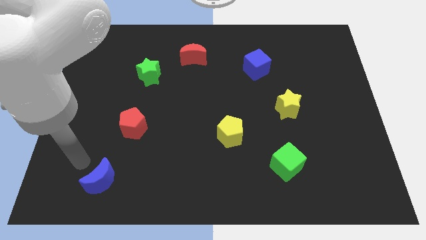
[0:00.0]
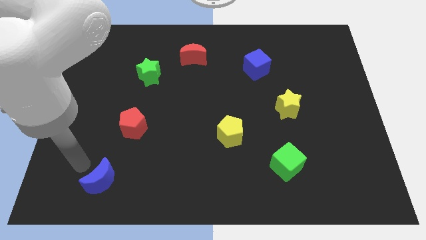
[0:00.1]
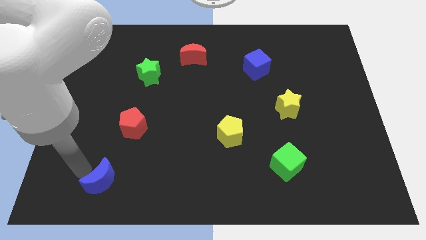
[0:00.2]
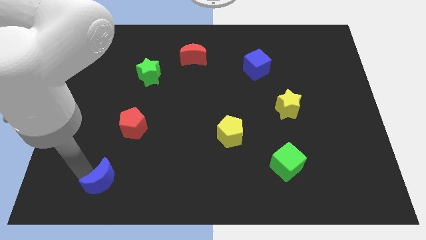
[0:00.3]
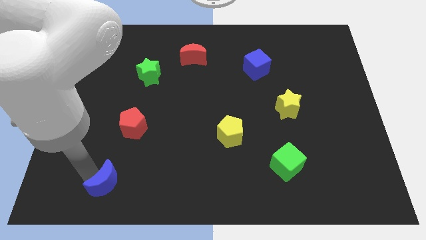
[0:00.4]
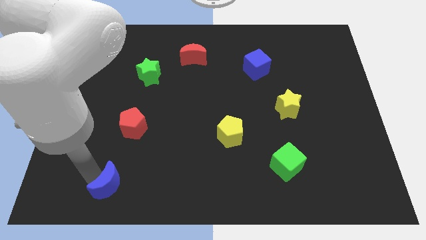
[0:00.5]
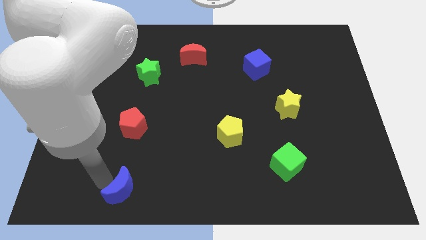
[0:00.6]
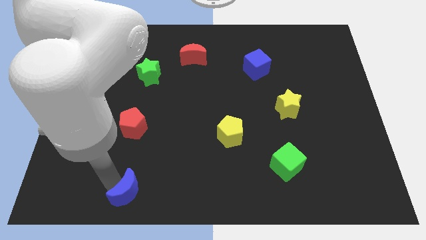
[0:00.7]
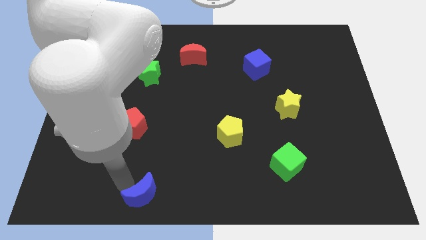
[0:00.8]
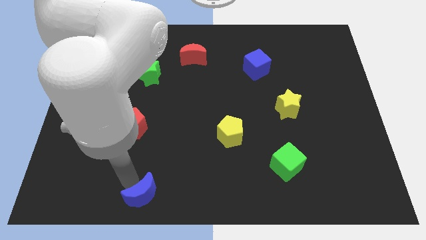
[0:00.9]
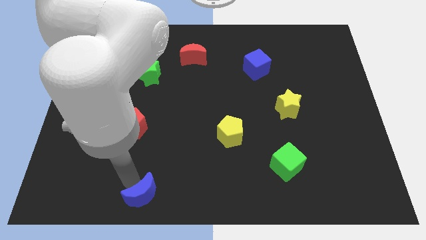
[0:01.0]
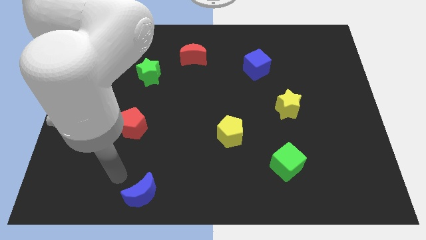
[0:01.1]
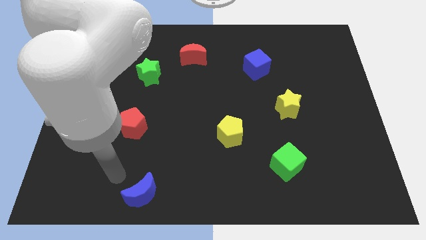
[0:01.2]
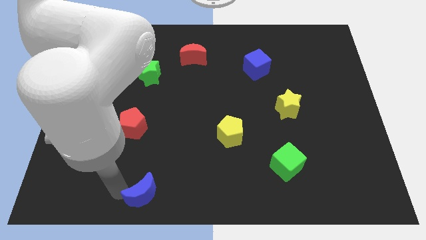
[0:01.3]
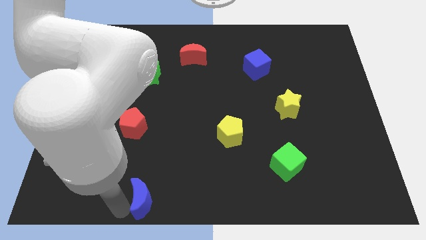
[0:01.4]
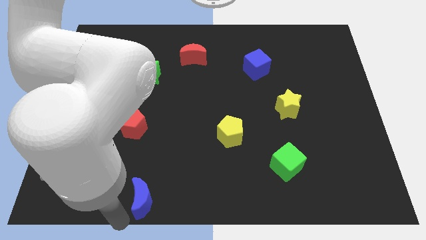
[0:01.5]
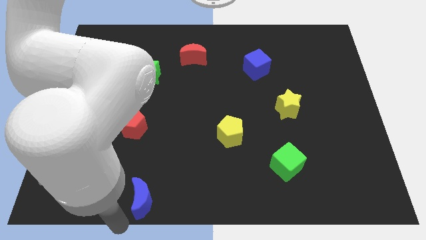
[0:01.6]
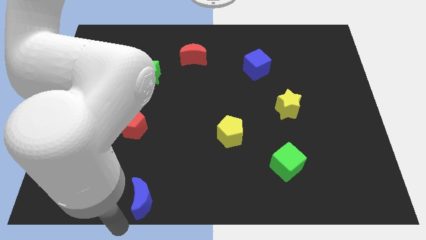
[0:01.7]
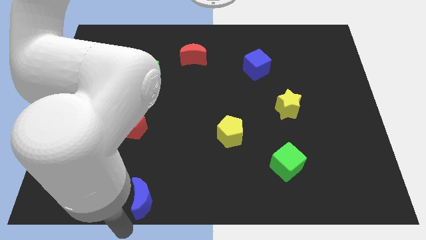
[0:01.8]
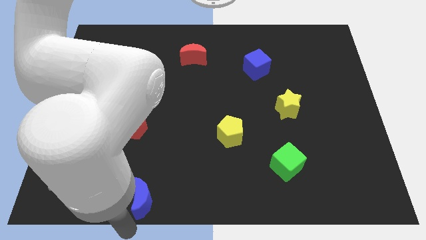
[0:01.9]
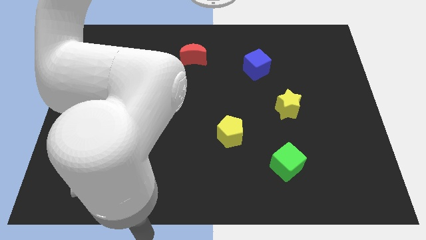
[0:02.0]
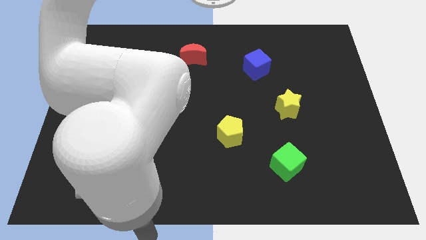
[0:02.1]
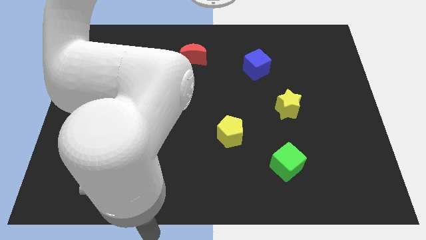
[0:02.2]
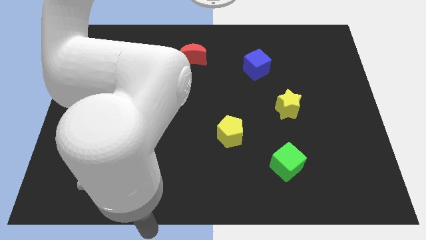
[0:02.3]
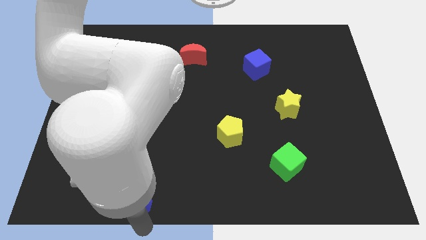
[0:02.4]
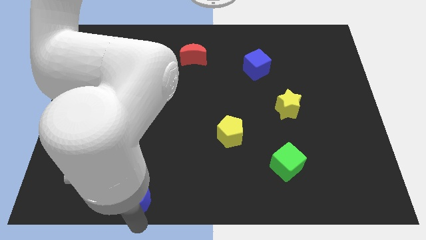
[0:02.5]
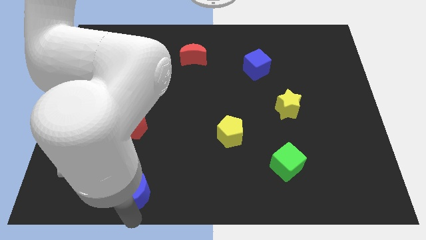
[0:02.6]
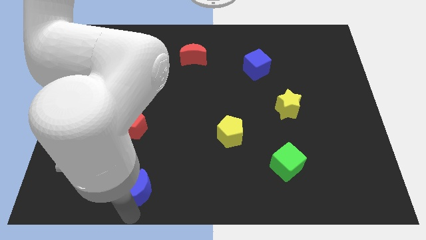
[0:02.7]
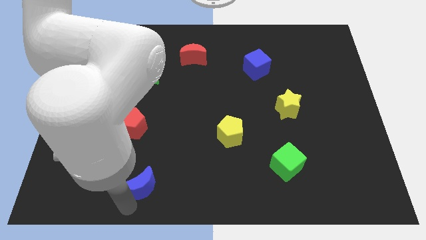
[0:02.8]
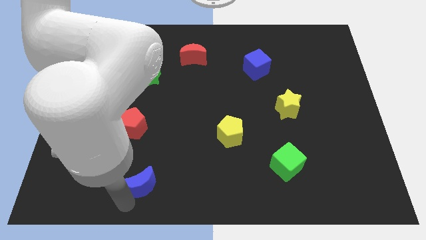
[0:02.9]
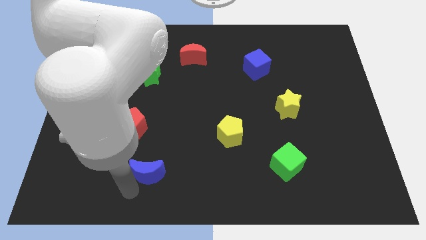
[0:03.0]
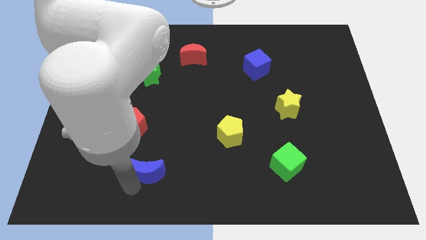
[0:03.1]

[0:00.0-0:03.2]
push the blue moon diagonally bottom right to the red pentagon

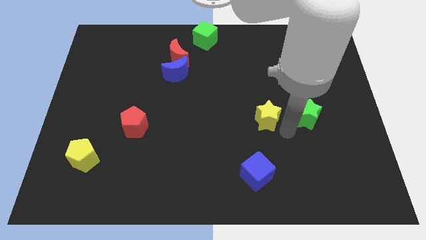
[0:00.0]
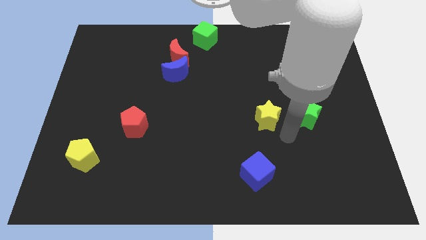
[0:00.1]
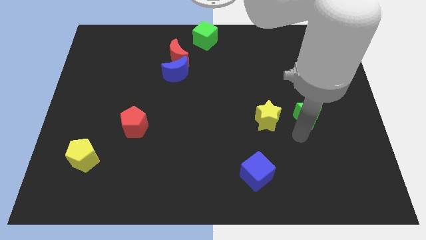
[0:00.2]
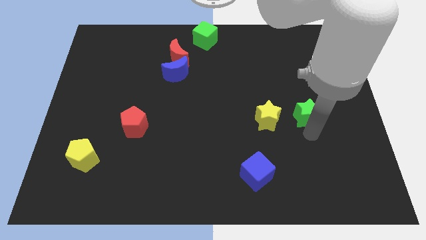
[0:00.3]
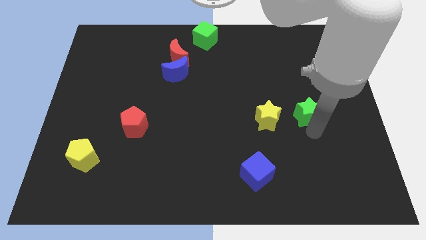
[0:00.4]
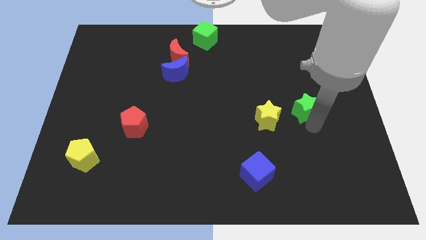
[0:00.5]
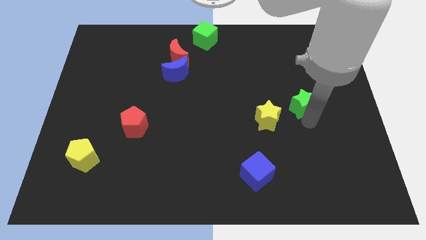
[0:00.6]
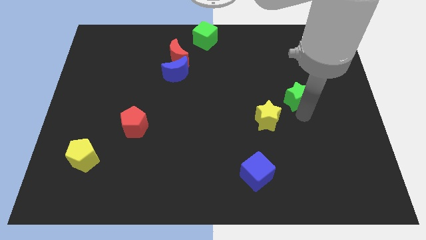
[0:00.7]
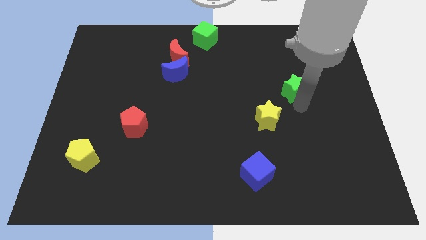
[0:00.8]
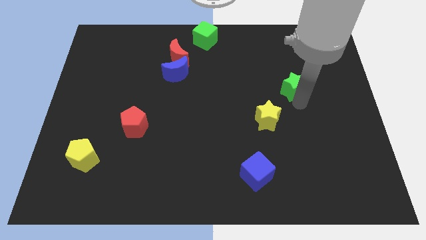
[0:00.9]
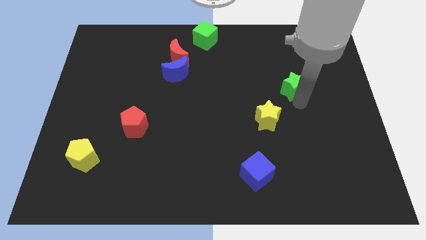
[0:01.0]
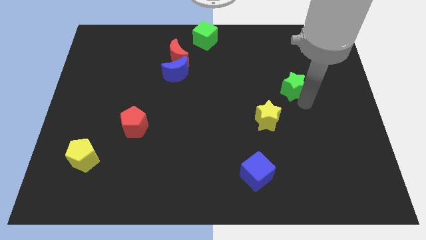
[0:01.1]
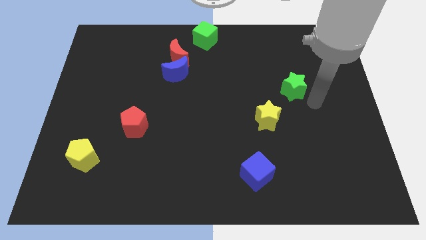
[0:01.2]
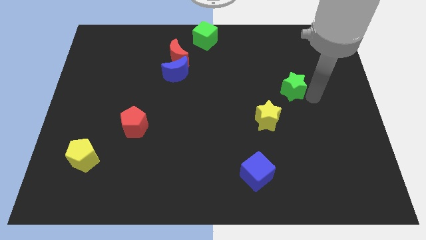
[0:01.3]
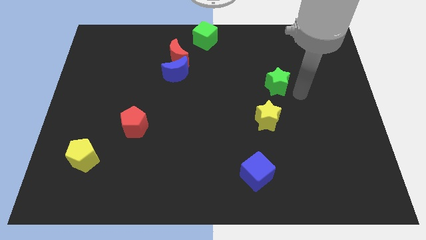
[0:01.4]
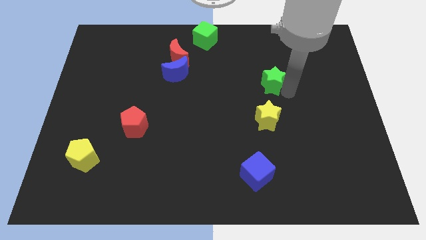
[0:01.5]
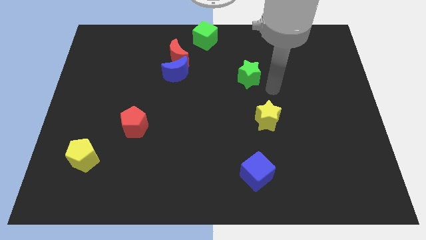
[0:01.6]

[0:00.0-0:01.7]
push the green star above the yellow star

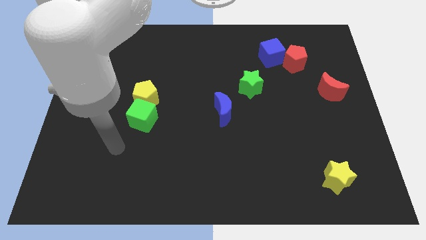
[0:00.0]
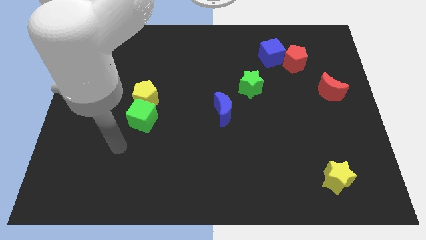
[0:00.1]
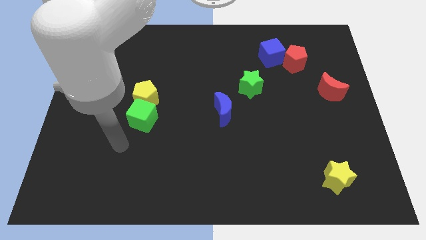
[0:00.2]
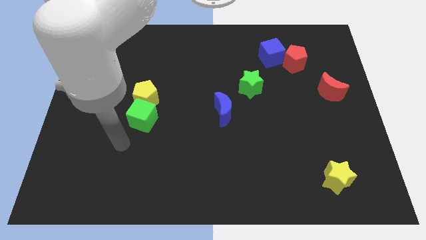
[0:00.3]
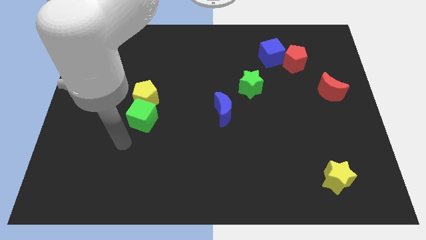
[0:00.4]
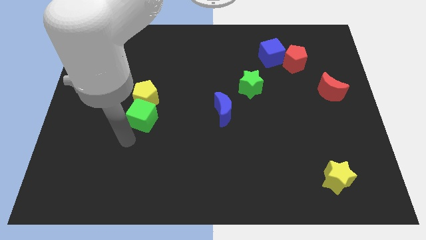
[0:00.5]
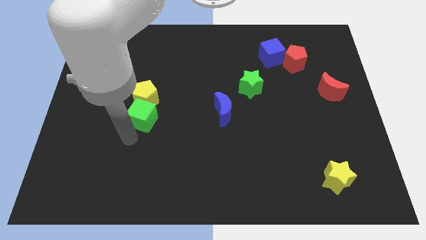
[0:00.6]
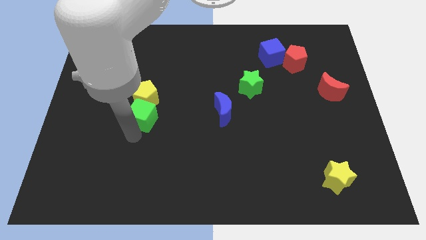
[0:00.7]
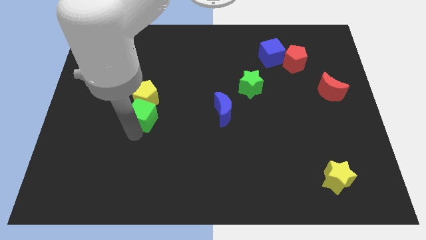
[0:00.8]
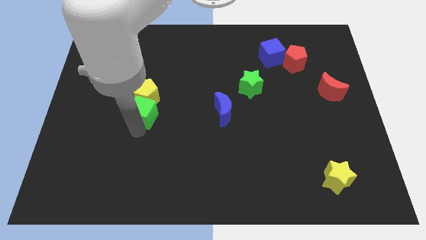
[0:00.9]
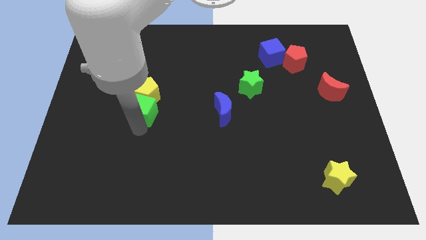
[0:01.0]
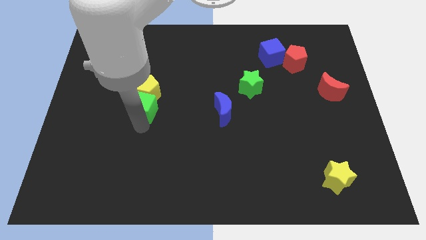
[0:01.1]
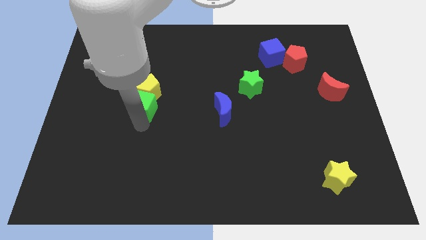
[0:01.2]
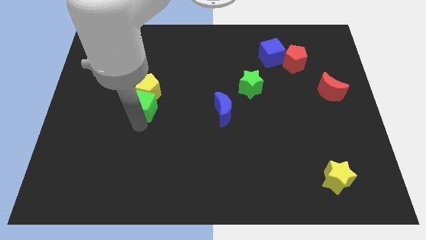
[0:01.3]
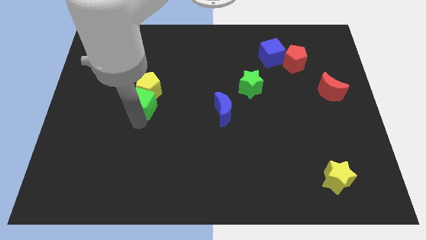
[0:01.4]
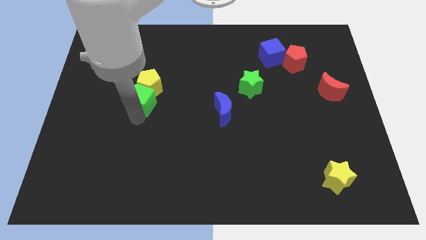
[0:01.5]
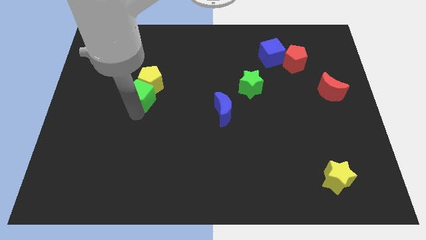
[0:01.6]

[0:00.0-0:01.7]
push the green cube below the yellow pentagon

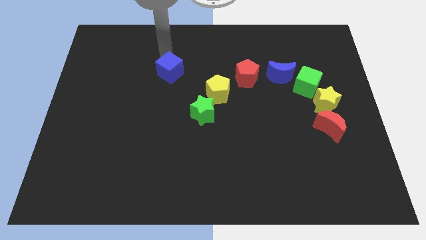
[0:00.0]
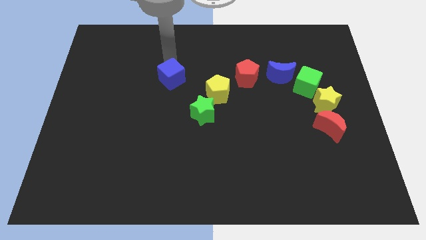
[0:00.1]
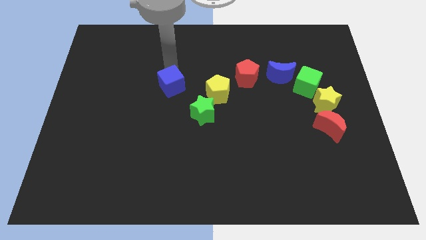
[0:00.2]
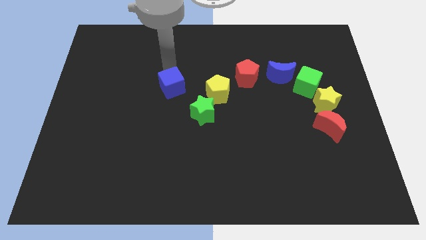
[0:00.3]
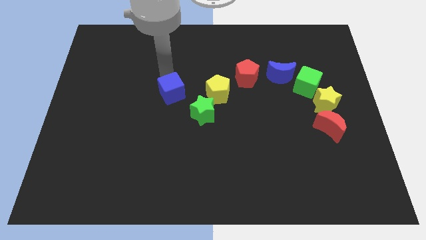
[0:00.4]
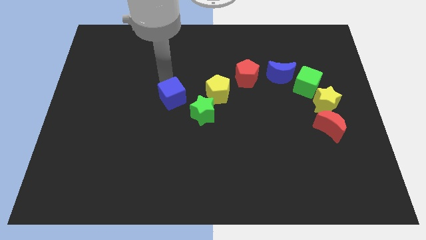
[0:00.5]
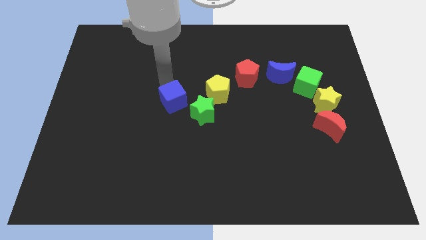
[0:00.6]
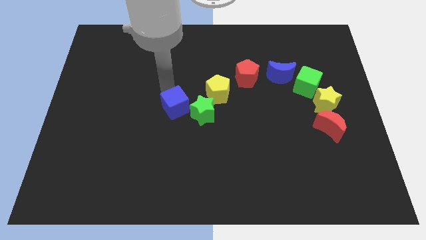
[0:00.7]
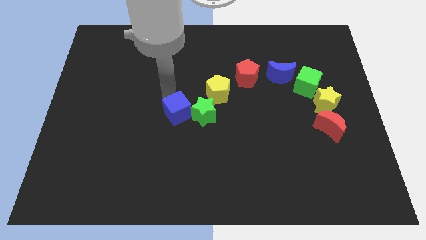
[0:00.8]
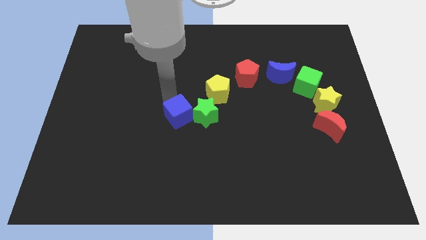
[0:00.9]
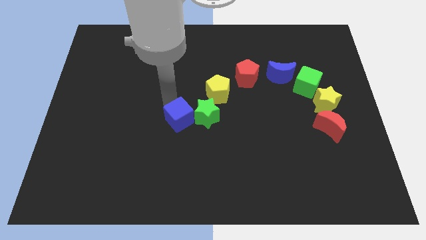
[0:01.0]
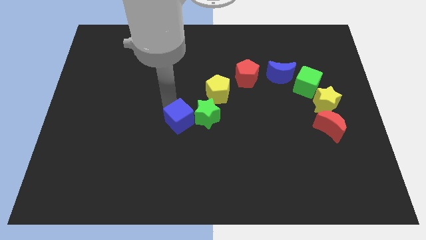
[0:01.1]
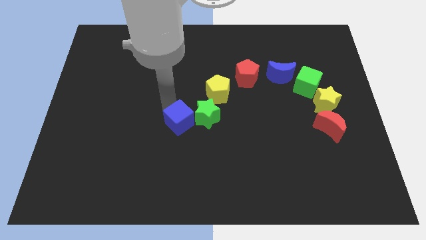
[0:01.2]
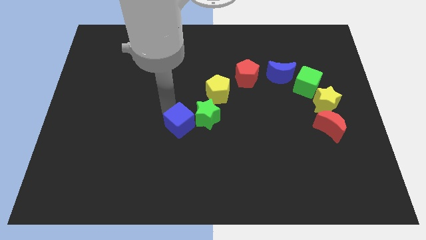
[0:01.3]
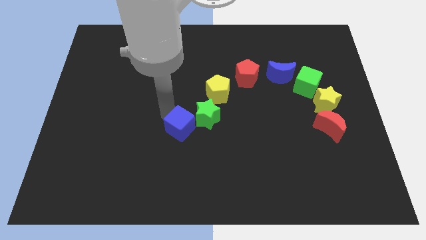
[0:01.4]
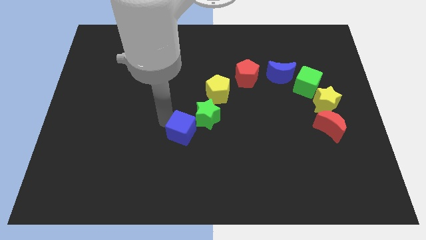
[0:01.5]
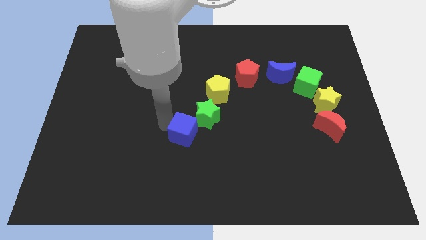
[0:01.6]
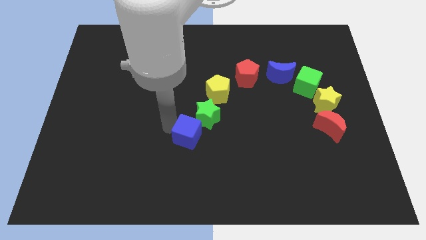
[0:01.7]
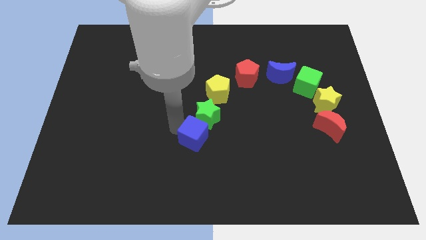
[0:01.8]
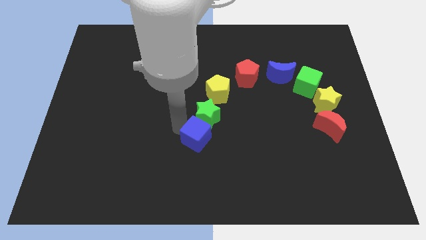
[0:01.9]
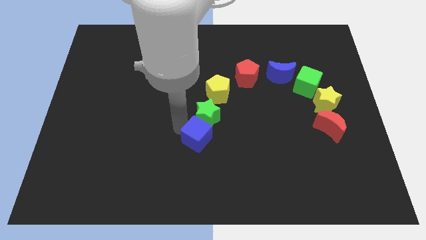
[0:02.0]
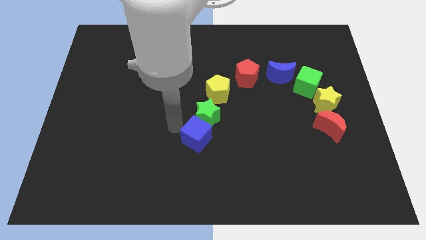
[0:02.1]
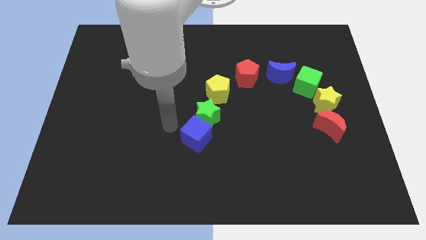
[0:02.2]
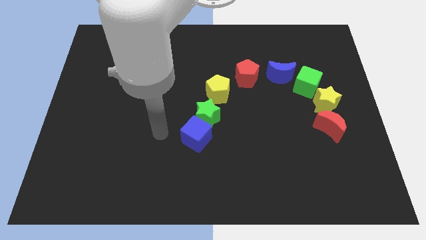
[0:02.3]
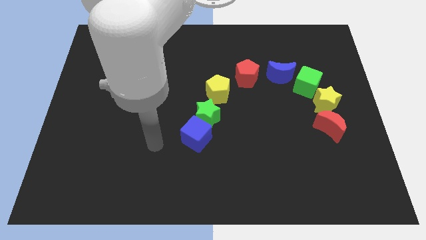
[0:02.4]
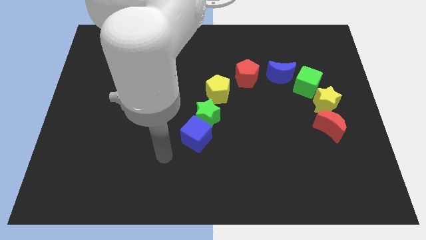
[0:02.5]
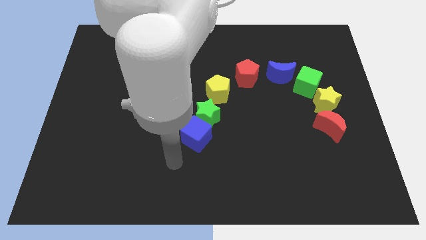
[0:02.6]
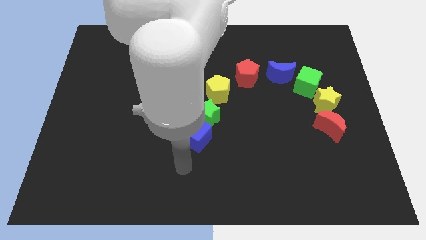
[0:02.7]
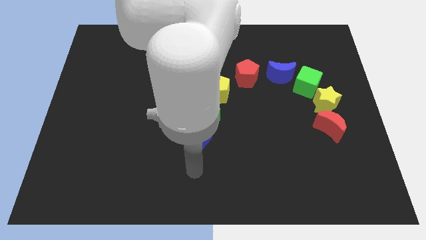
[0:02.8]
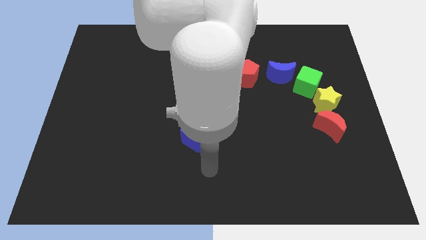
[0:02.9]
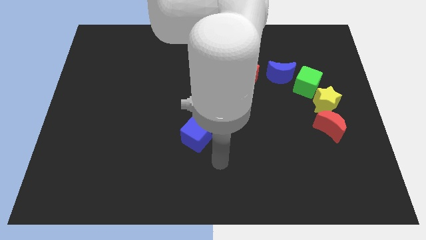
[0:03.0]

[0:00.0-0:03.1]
drag the blue cube and place it next to the green star
